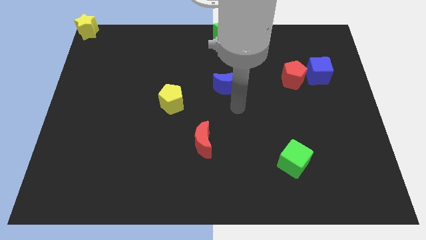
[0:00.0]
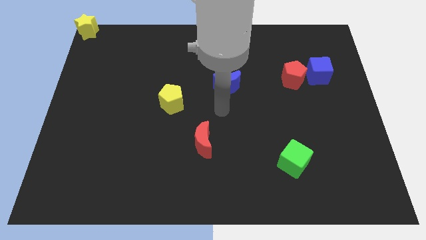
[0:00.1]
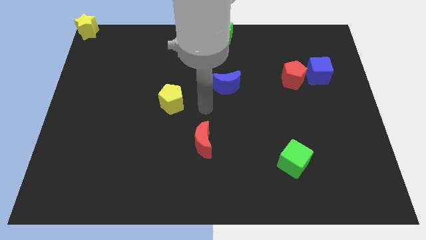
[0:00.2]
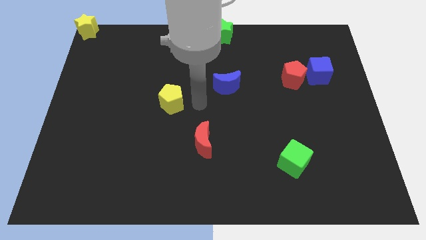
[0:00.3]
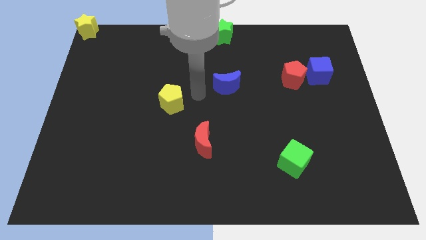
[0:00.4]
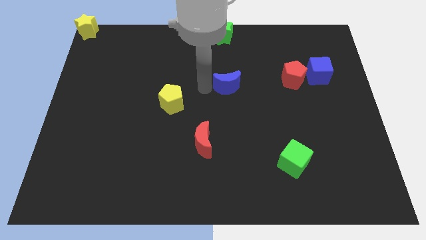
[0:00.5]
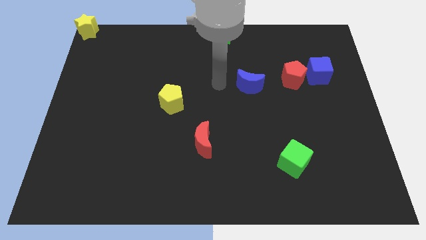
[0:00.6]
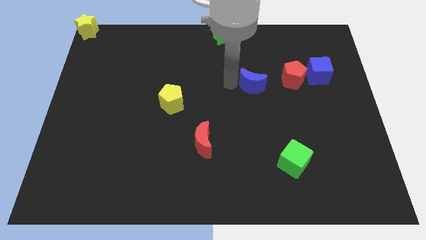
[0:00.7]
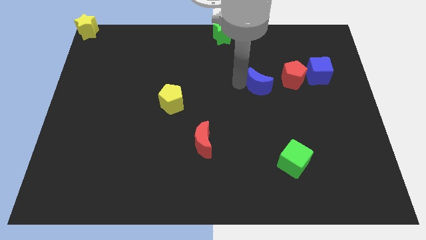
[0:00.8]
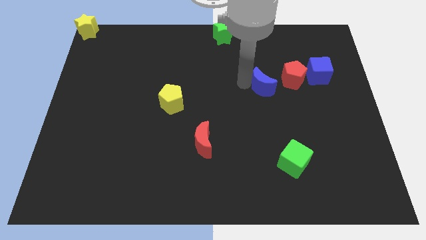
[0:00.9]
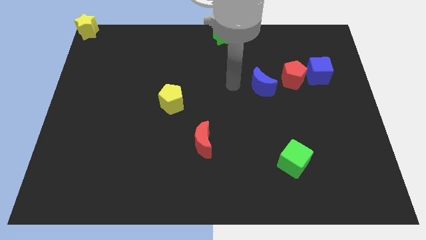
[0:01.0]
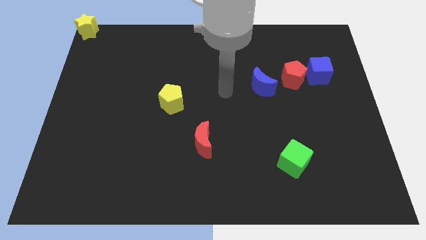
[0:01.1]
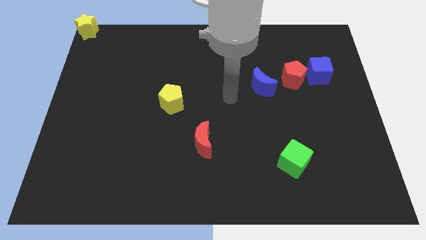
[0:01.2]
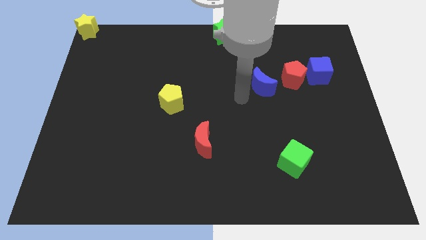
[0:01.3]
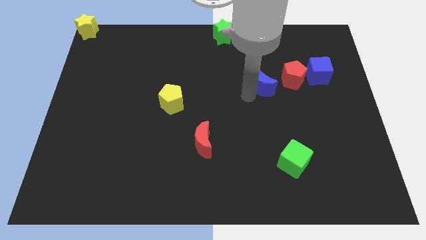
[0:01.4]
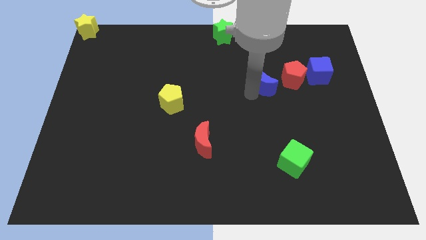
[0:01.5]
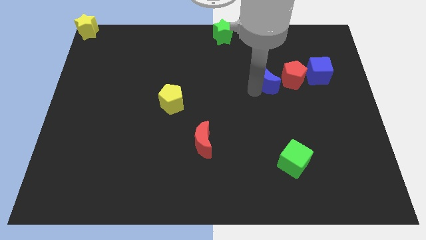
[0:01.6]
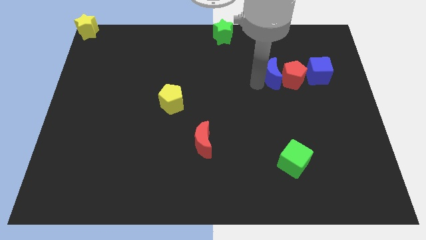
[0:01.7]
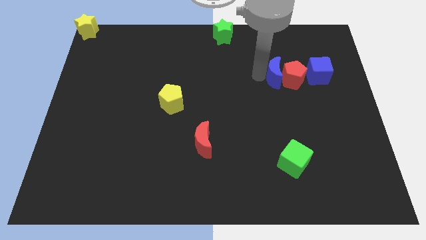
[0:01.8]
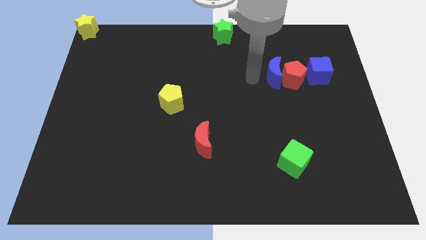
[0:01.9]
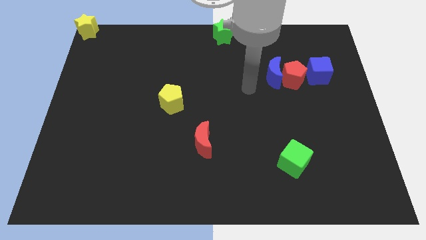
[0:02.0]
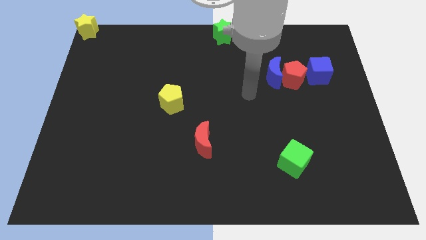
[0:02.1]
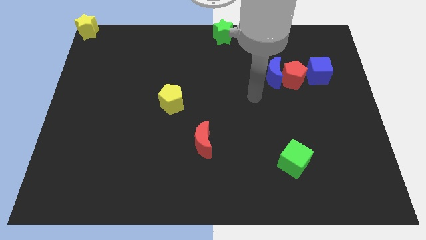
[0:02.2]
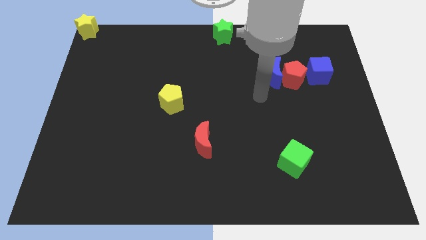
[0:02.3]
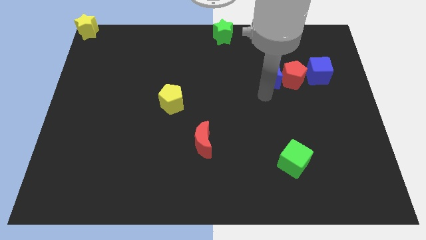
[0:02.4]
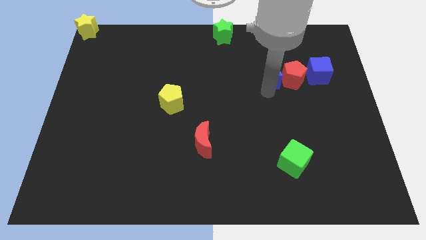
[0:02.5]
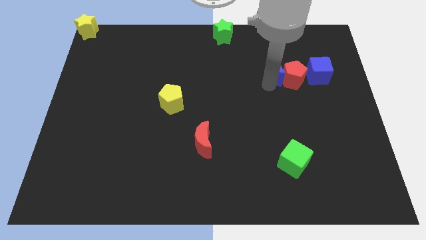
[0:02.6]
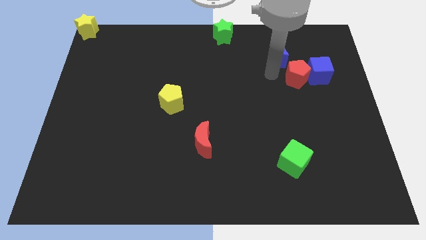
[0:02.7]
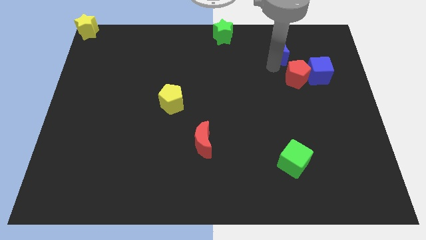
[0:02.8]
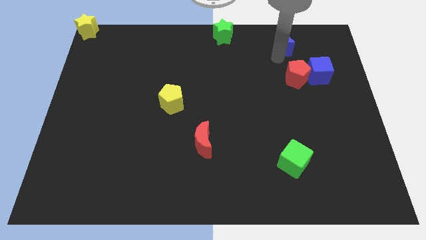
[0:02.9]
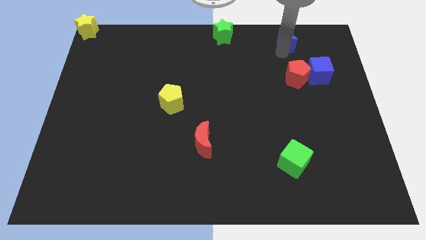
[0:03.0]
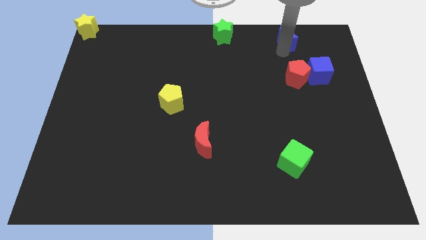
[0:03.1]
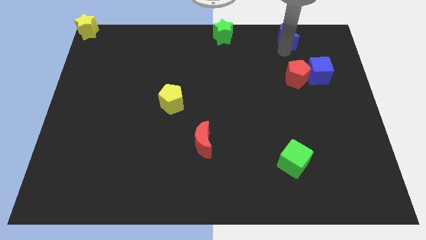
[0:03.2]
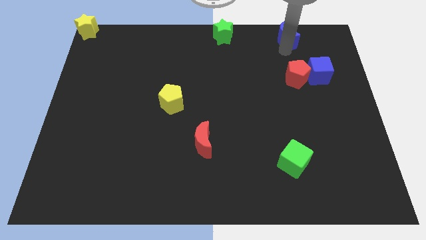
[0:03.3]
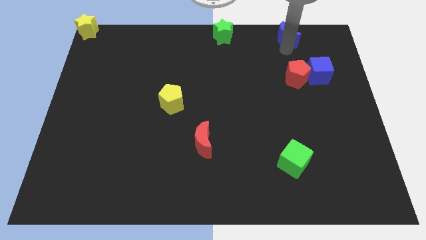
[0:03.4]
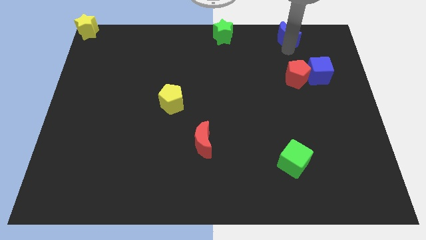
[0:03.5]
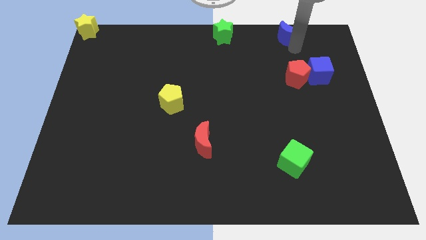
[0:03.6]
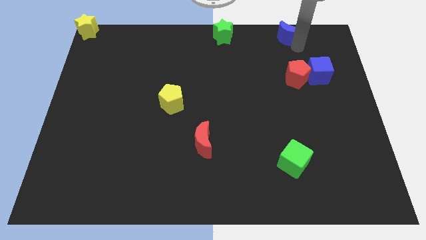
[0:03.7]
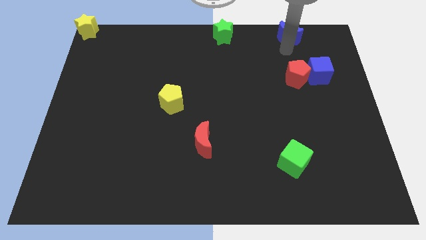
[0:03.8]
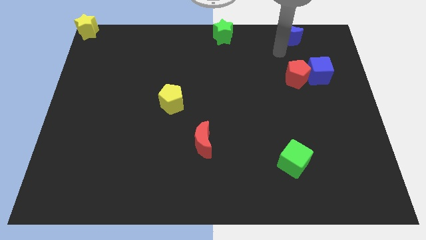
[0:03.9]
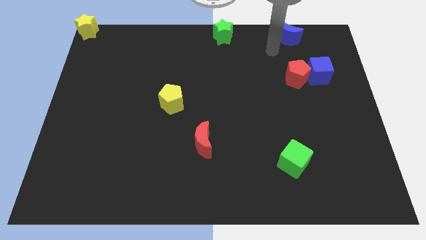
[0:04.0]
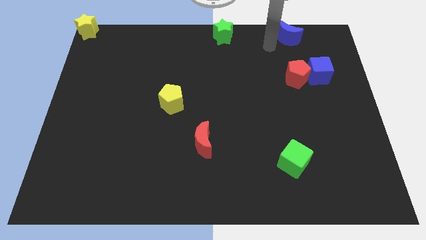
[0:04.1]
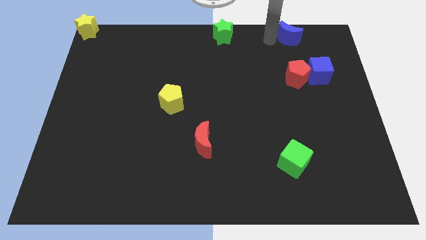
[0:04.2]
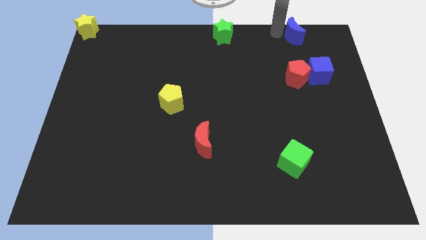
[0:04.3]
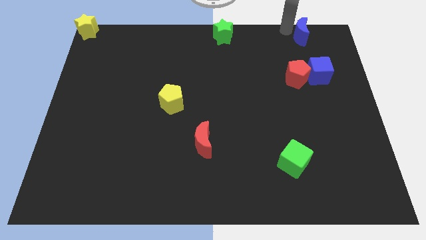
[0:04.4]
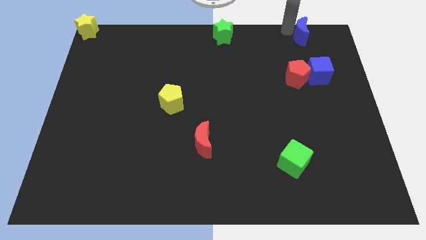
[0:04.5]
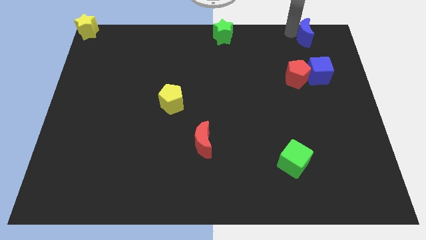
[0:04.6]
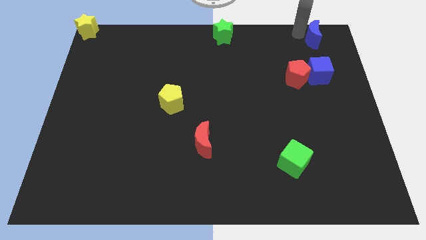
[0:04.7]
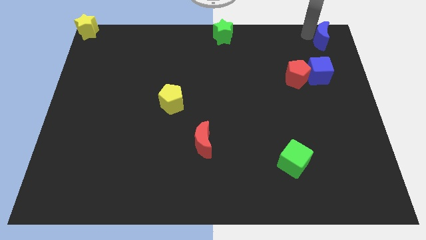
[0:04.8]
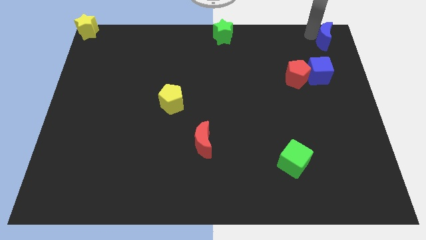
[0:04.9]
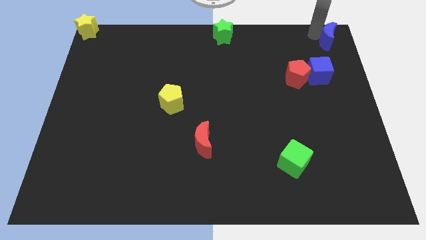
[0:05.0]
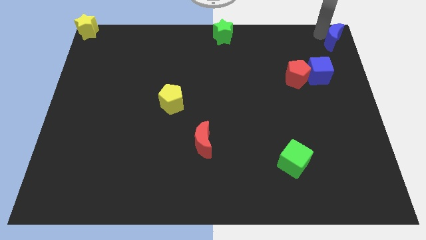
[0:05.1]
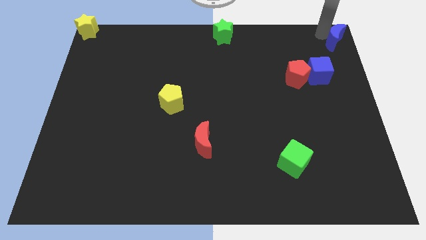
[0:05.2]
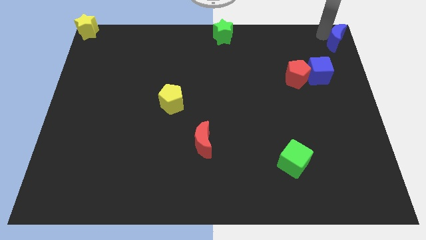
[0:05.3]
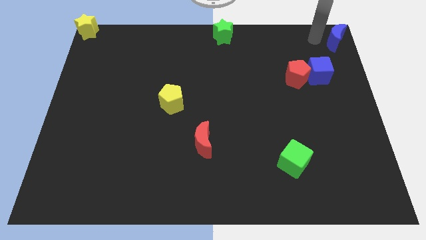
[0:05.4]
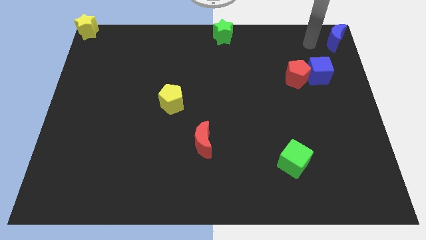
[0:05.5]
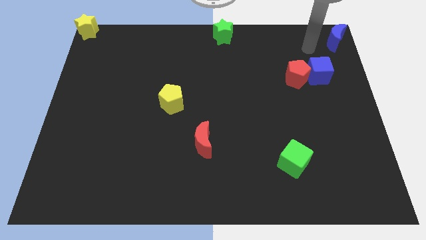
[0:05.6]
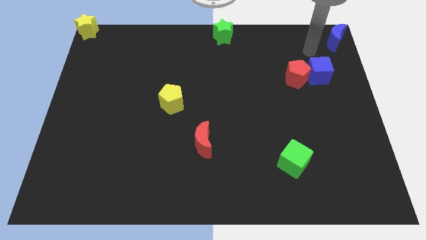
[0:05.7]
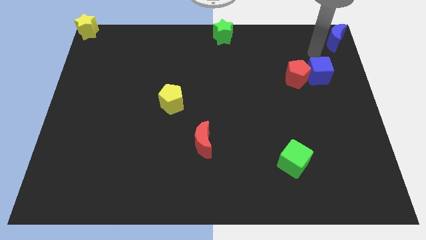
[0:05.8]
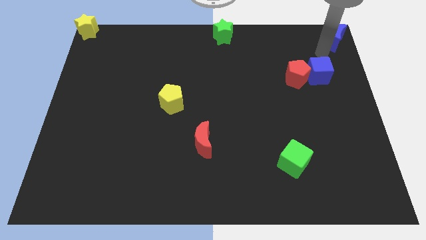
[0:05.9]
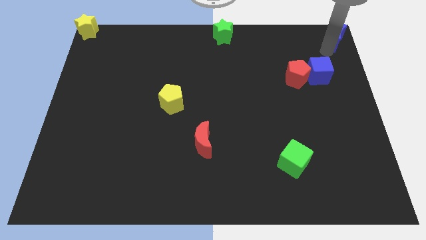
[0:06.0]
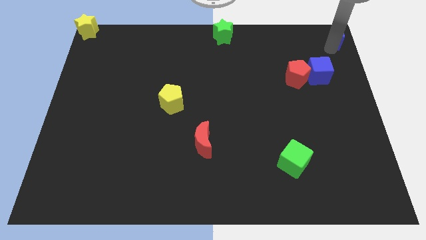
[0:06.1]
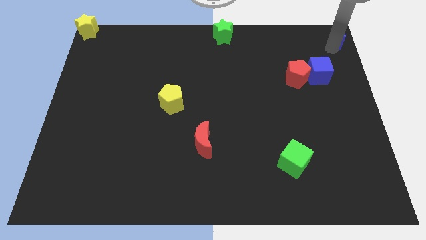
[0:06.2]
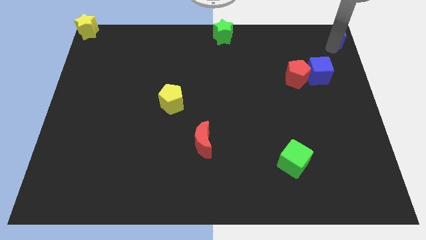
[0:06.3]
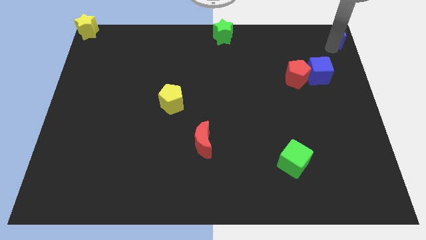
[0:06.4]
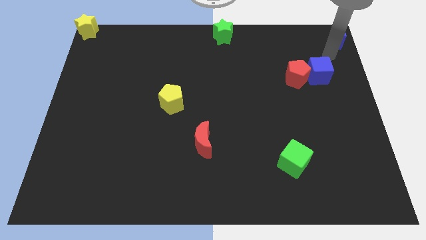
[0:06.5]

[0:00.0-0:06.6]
place the blue moon at the top right corner of the board

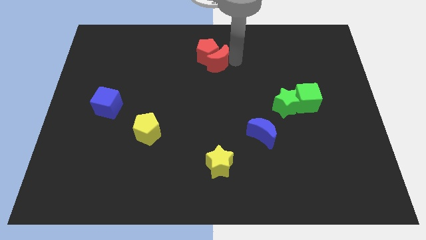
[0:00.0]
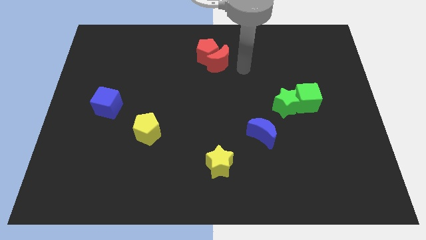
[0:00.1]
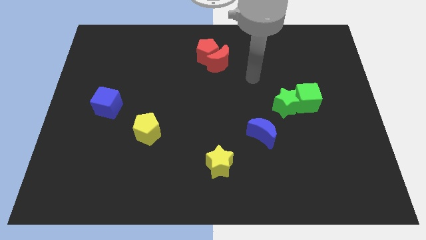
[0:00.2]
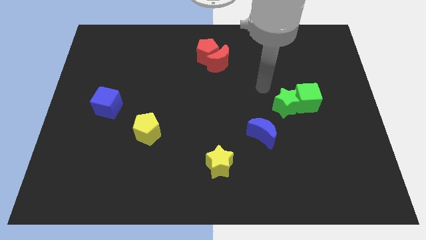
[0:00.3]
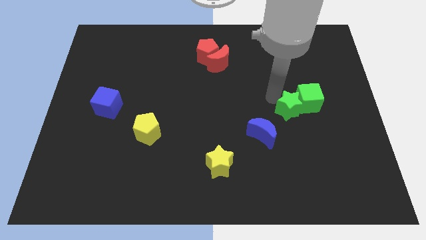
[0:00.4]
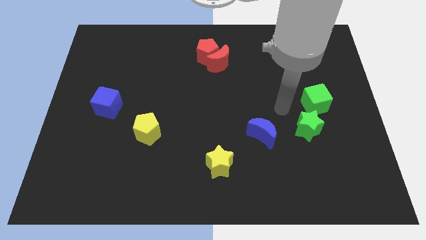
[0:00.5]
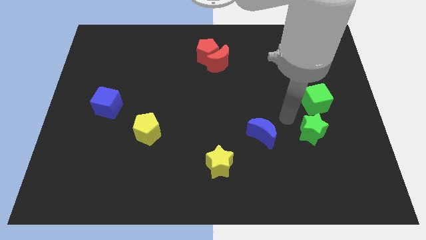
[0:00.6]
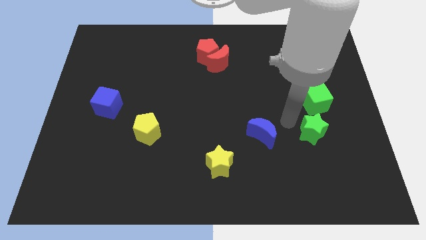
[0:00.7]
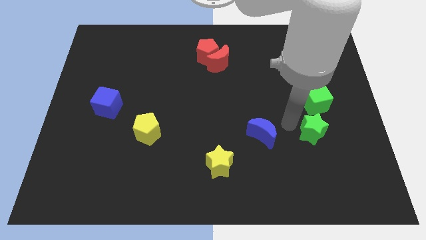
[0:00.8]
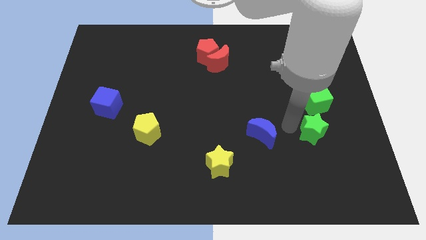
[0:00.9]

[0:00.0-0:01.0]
push the green star slightly away from the green cube

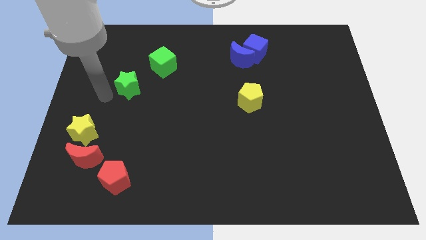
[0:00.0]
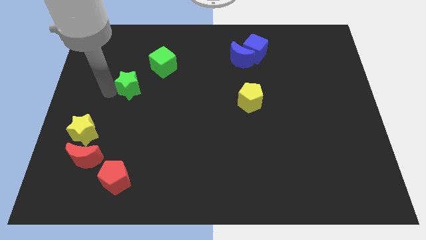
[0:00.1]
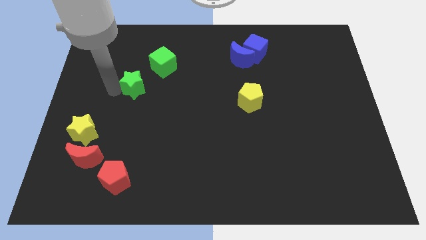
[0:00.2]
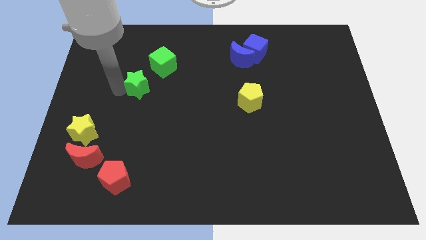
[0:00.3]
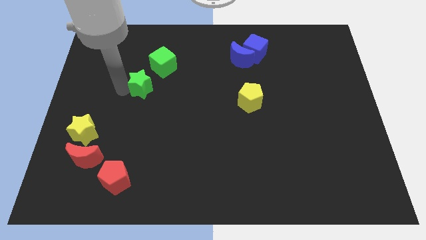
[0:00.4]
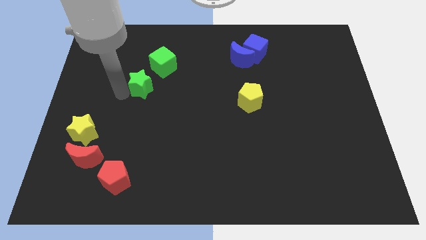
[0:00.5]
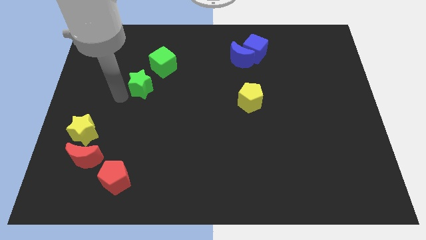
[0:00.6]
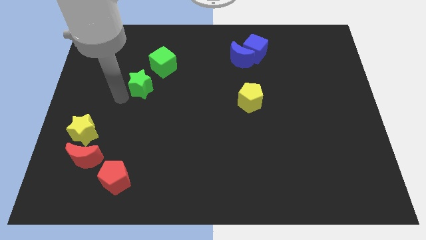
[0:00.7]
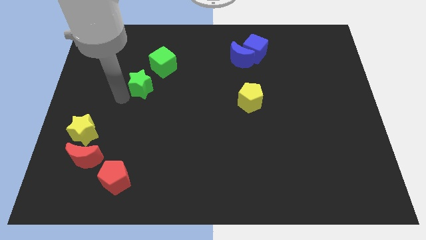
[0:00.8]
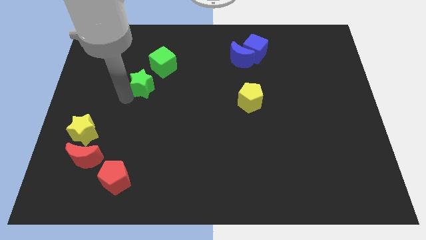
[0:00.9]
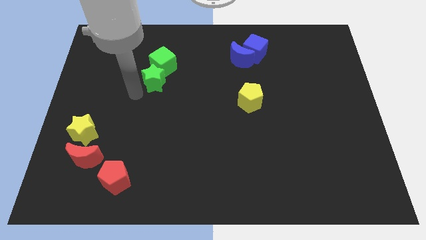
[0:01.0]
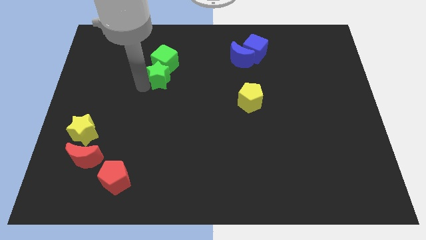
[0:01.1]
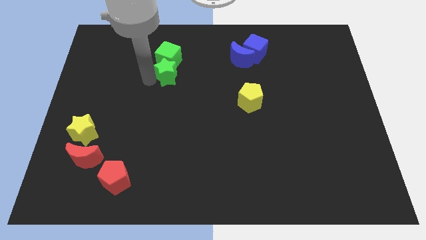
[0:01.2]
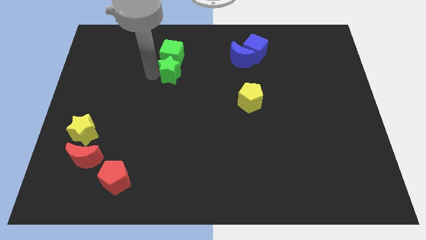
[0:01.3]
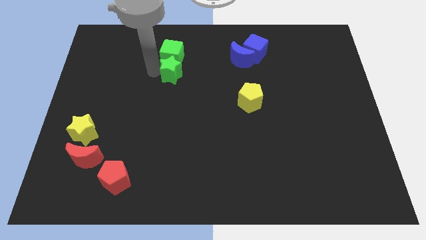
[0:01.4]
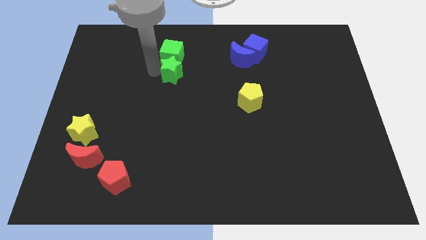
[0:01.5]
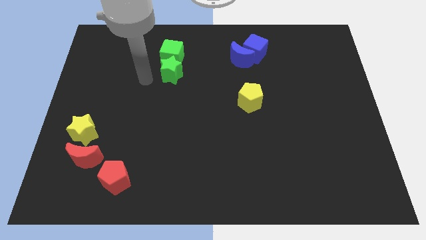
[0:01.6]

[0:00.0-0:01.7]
move green star into green cube
